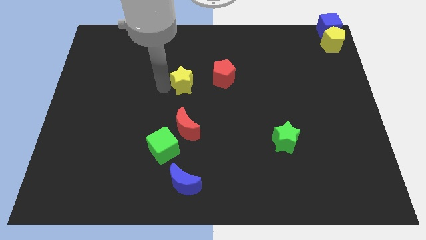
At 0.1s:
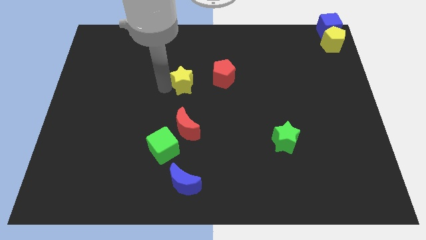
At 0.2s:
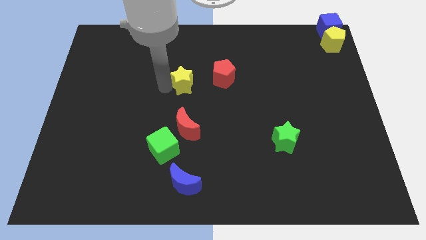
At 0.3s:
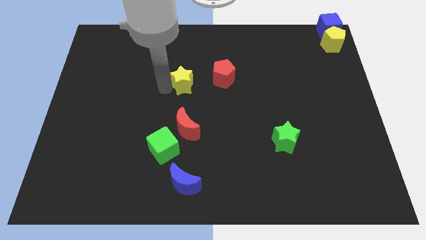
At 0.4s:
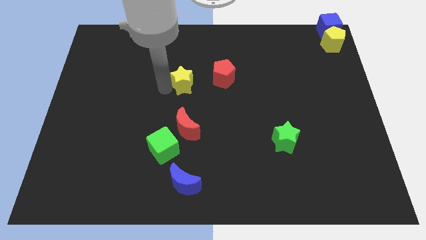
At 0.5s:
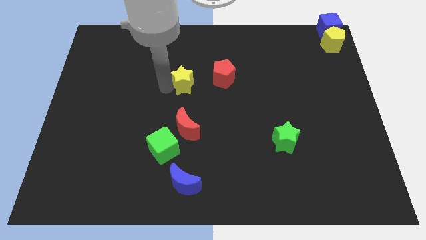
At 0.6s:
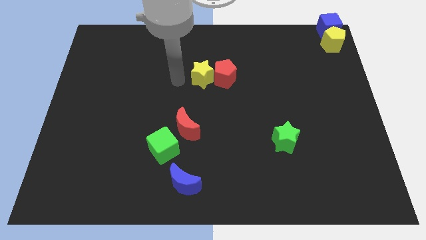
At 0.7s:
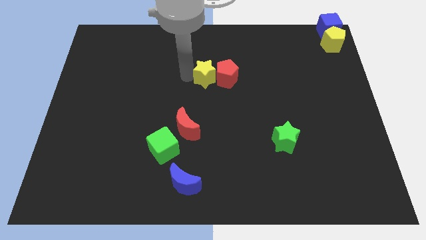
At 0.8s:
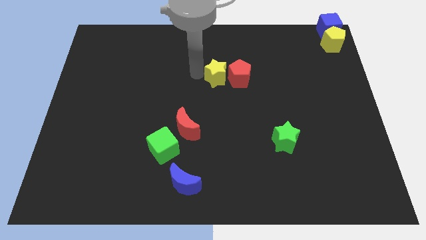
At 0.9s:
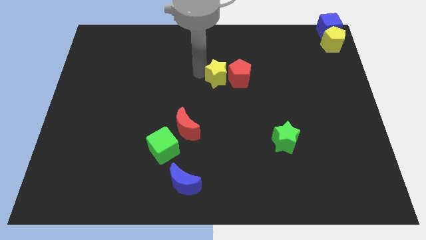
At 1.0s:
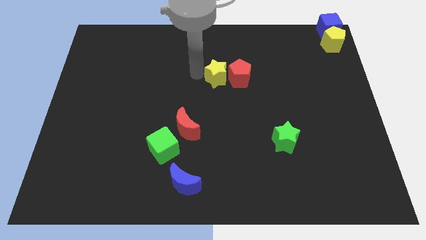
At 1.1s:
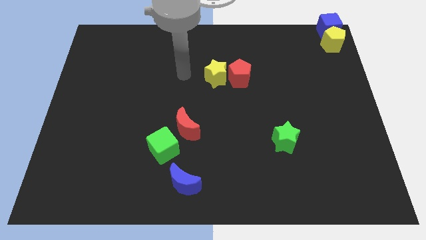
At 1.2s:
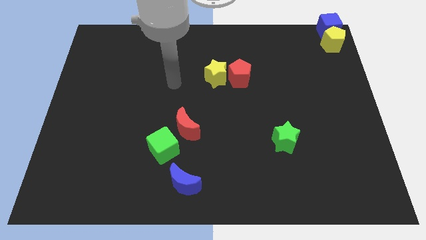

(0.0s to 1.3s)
slide the yellow star into the left side of the red pentagon

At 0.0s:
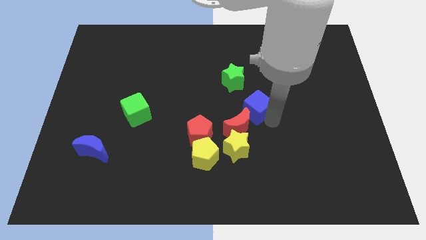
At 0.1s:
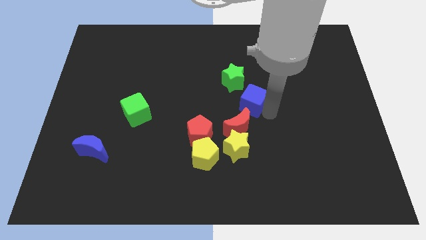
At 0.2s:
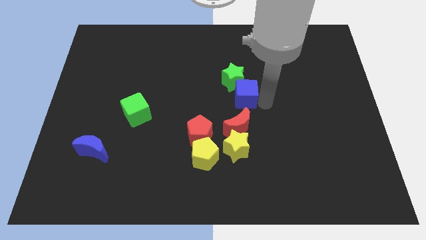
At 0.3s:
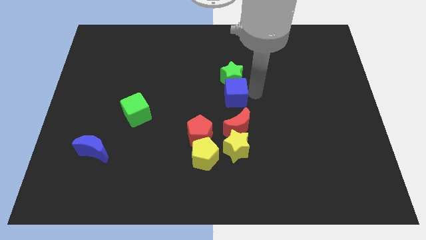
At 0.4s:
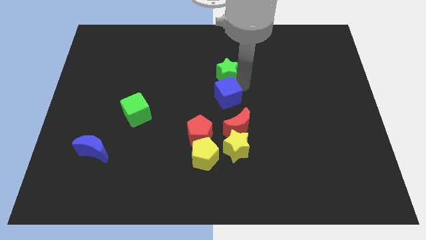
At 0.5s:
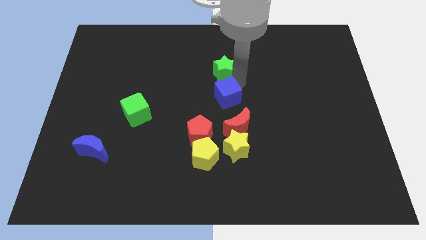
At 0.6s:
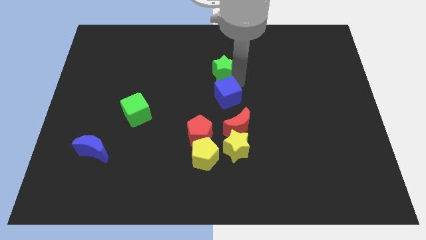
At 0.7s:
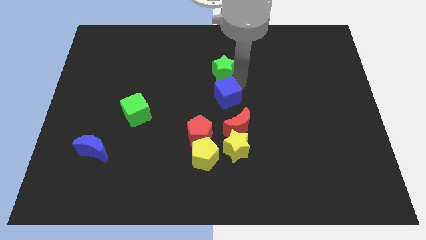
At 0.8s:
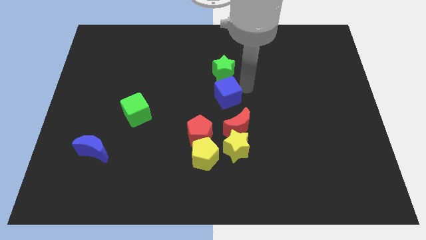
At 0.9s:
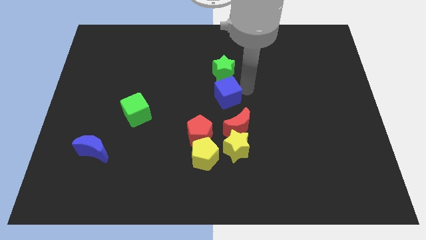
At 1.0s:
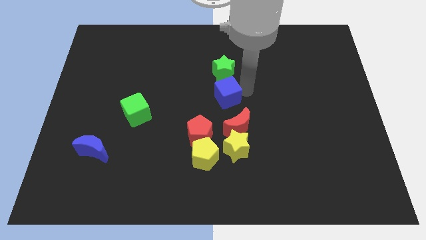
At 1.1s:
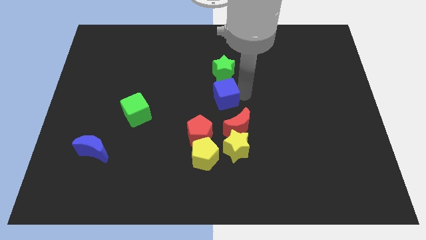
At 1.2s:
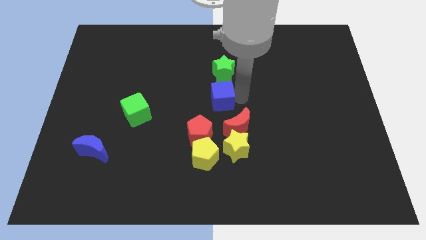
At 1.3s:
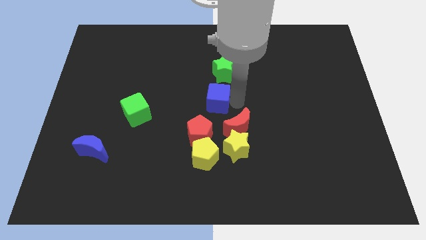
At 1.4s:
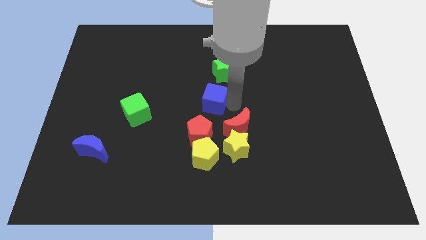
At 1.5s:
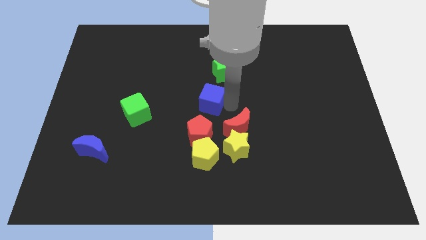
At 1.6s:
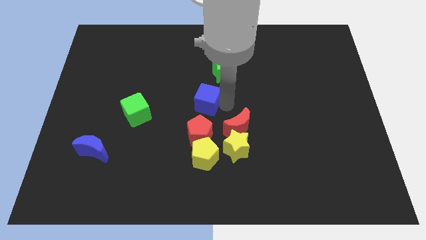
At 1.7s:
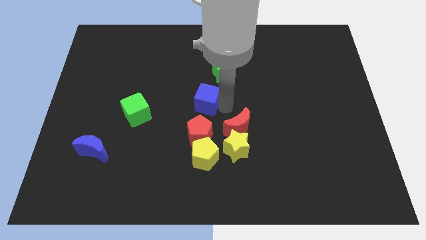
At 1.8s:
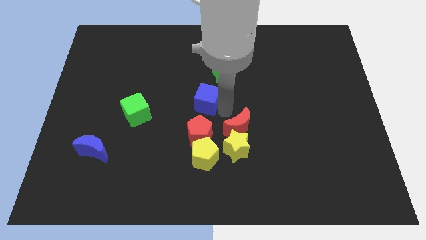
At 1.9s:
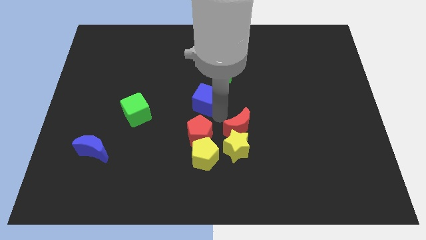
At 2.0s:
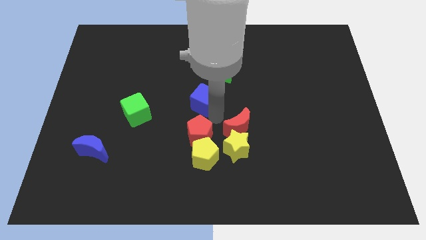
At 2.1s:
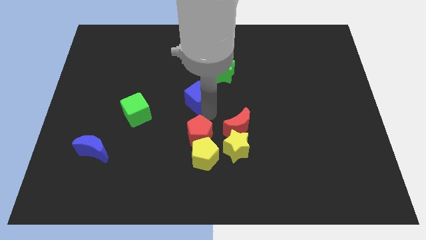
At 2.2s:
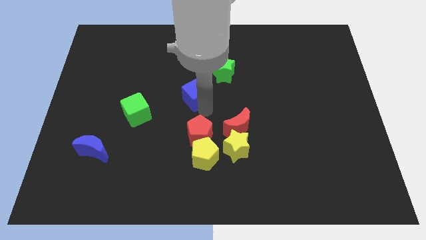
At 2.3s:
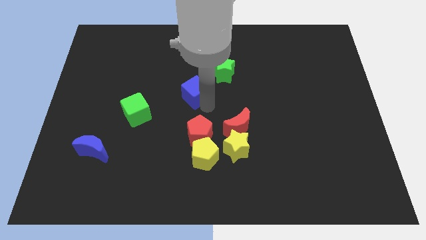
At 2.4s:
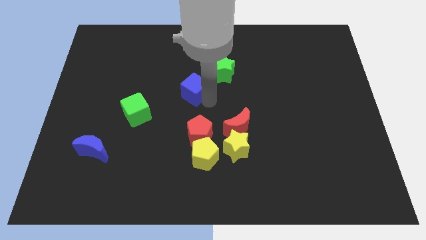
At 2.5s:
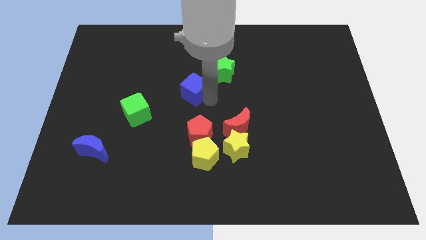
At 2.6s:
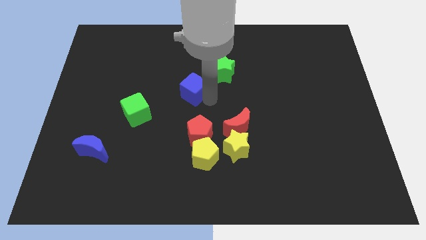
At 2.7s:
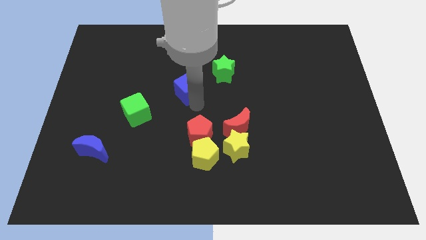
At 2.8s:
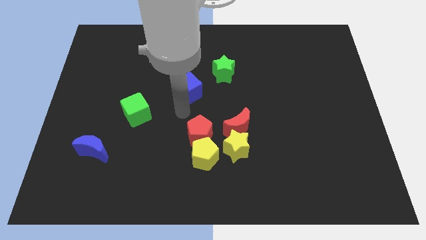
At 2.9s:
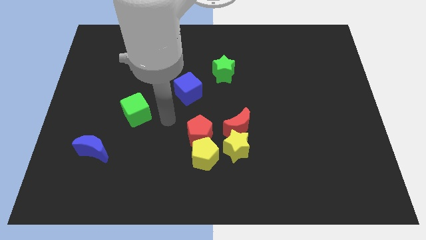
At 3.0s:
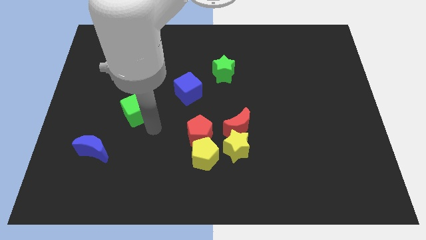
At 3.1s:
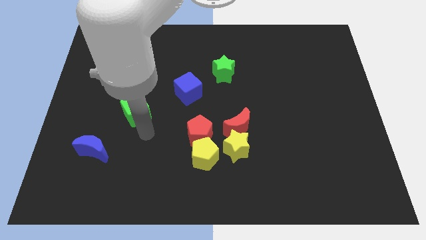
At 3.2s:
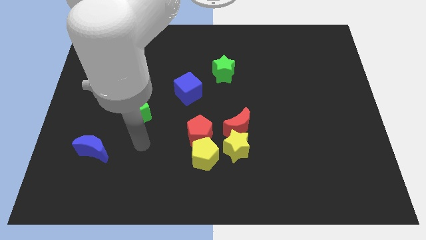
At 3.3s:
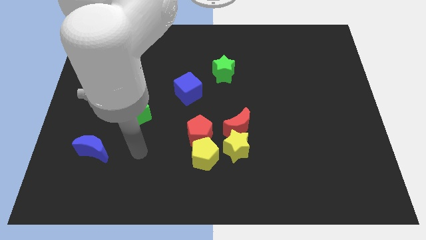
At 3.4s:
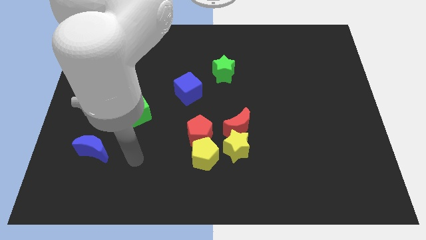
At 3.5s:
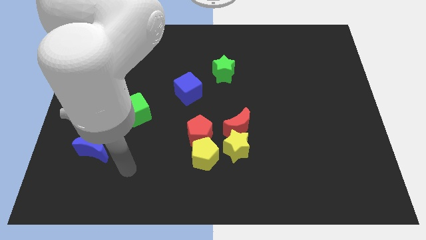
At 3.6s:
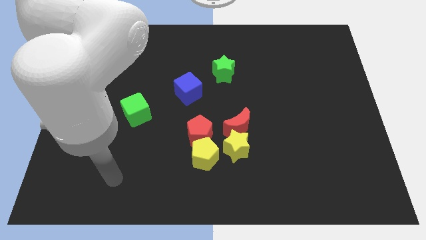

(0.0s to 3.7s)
move blue cube in between the green star and green cube

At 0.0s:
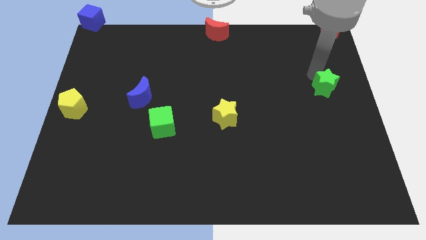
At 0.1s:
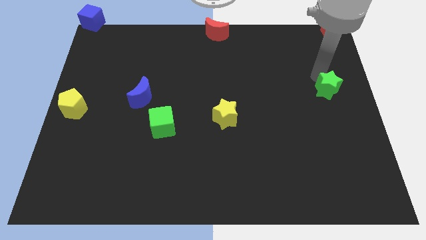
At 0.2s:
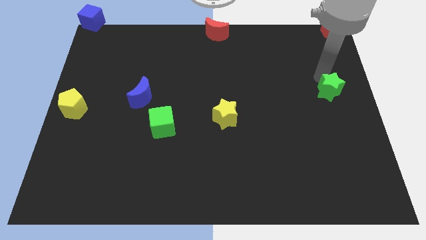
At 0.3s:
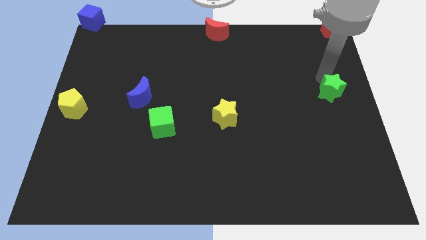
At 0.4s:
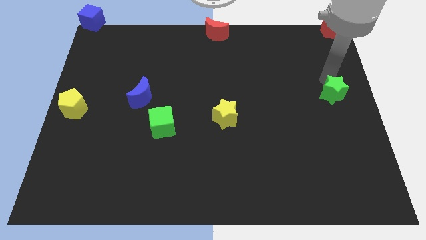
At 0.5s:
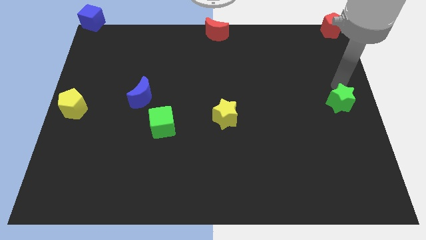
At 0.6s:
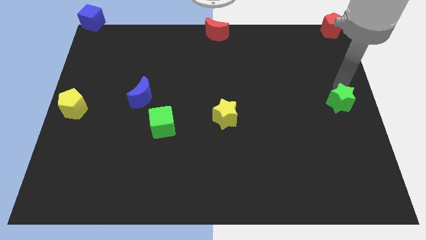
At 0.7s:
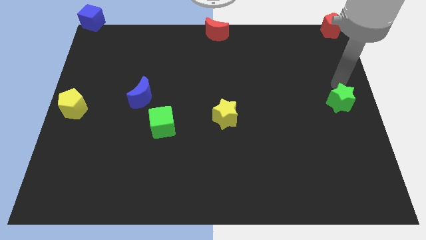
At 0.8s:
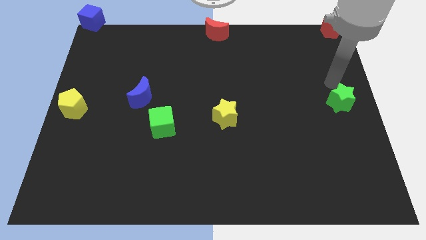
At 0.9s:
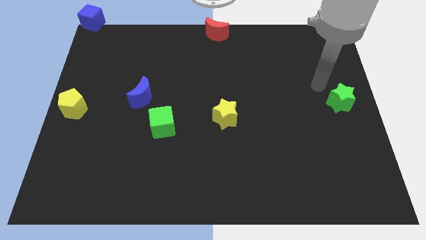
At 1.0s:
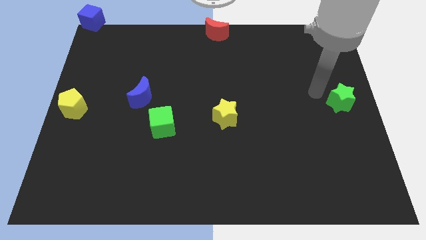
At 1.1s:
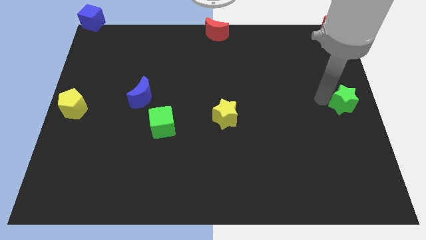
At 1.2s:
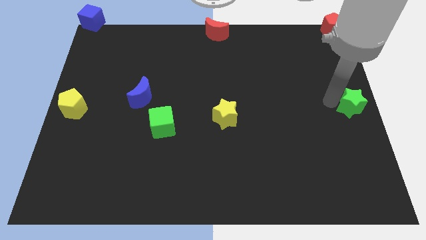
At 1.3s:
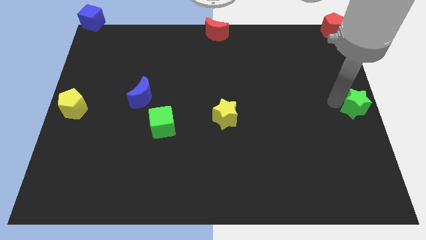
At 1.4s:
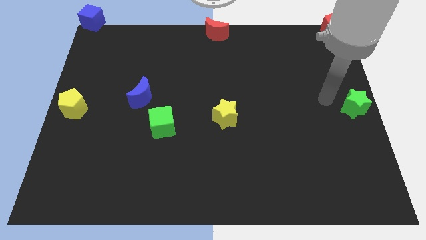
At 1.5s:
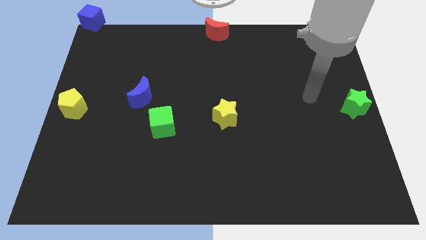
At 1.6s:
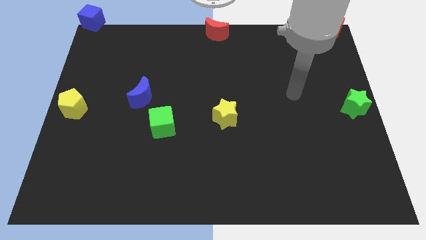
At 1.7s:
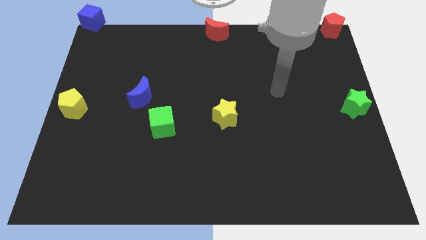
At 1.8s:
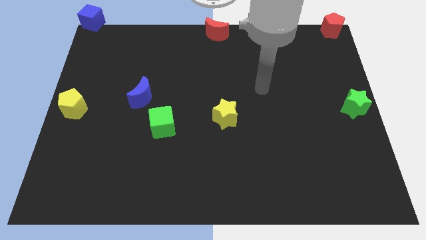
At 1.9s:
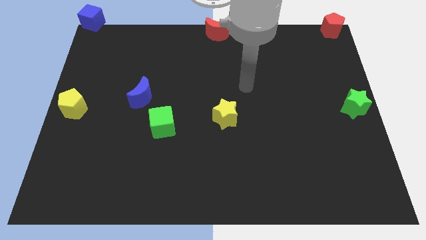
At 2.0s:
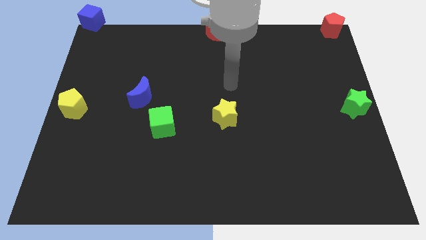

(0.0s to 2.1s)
move green star at the center right

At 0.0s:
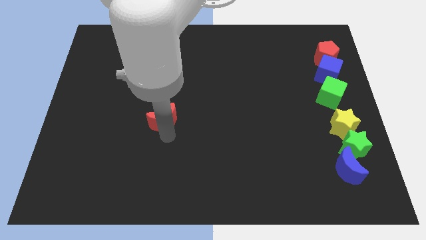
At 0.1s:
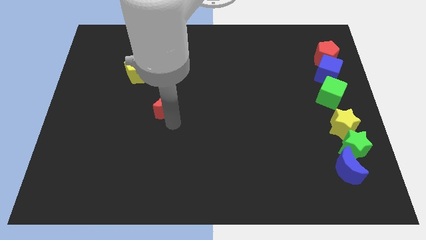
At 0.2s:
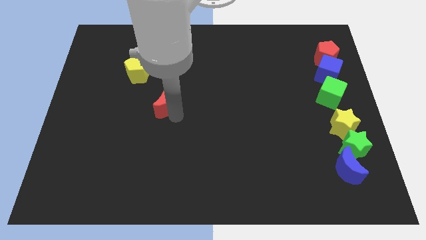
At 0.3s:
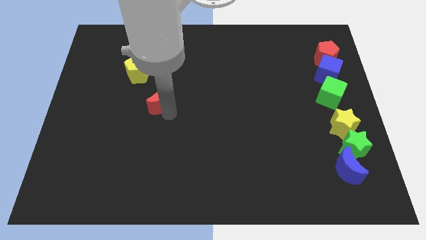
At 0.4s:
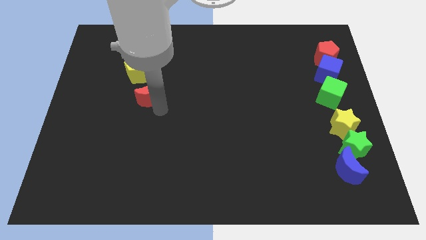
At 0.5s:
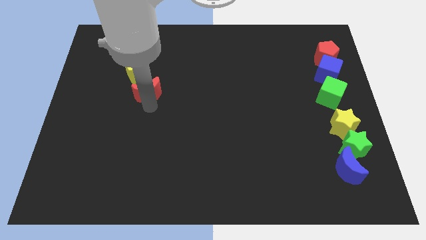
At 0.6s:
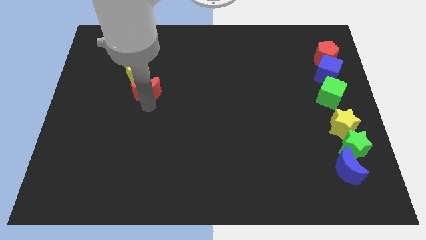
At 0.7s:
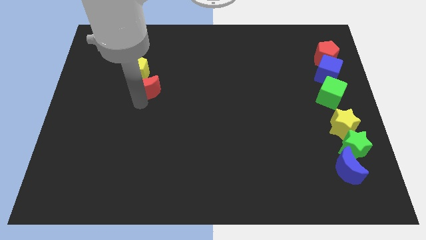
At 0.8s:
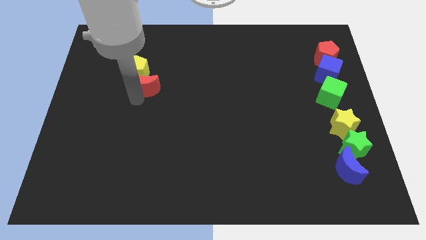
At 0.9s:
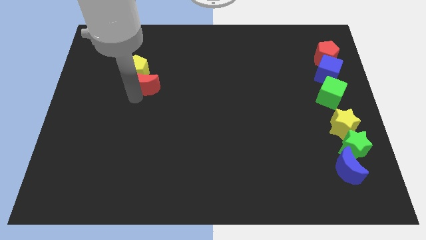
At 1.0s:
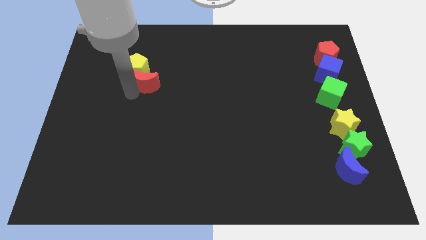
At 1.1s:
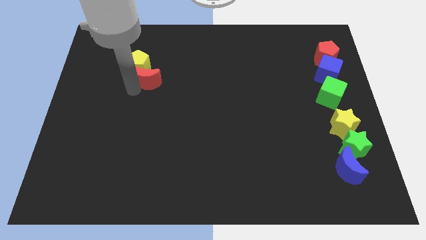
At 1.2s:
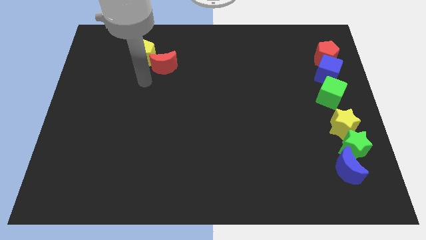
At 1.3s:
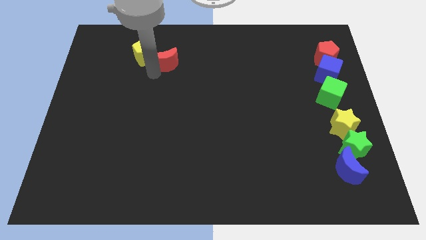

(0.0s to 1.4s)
push the red moon into the yellow pentagon

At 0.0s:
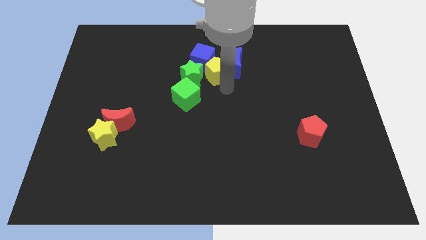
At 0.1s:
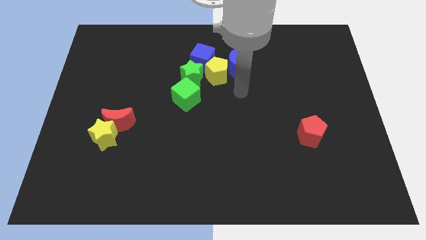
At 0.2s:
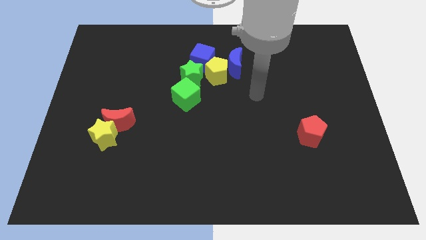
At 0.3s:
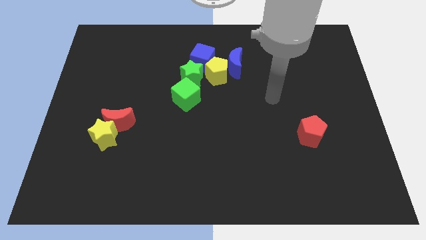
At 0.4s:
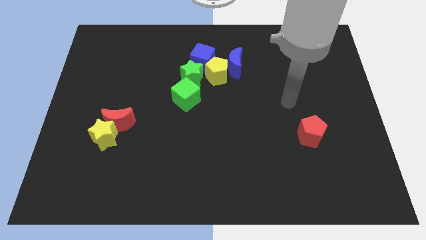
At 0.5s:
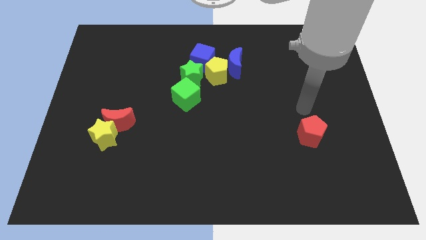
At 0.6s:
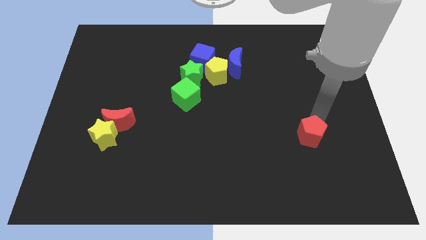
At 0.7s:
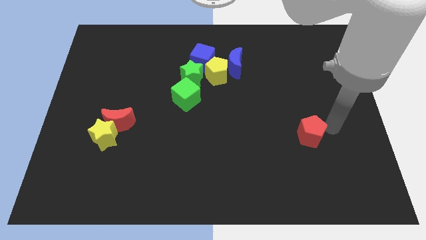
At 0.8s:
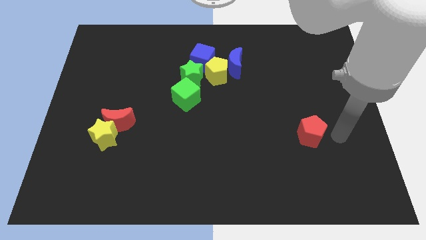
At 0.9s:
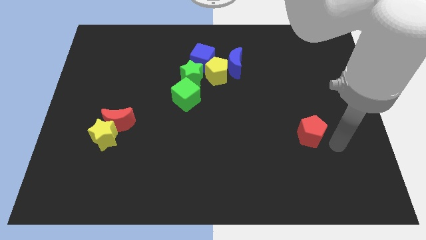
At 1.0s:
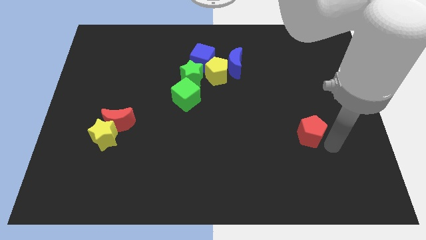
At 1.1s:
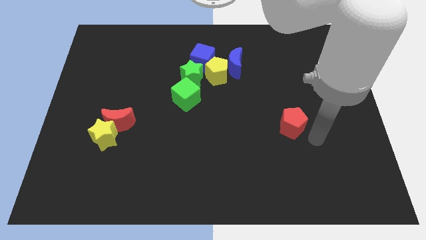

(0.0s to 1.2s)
touch your arm to the red pentagon
